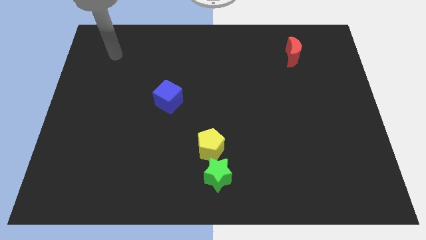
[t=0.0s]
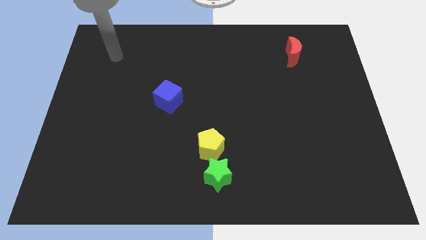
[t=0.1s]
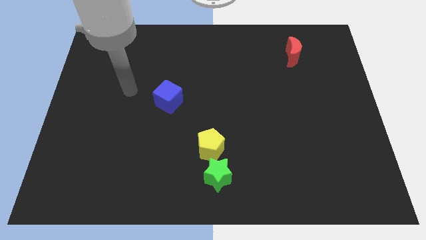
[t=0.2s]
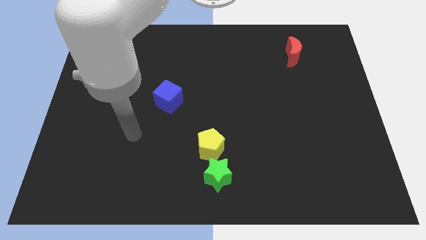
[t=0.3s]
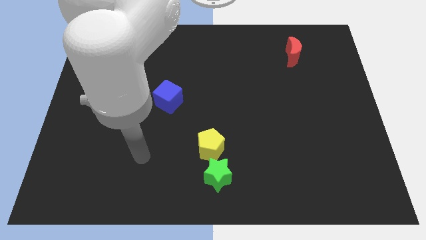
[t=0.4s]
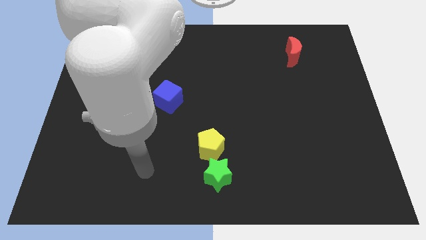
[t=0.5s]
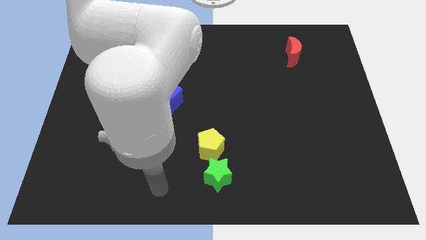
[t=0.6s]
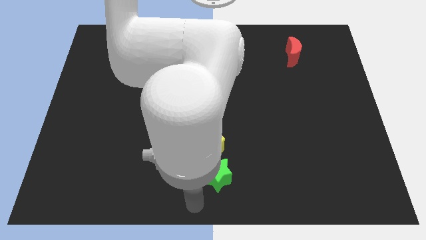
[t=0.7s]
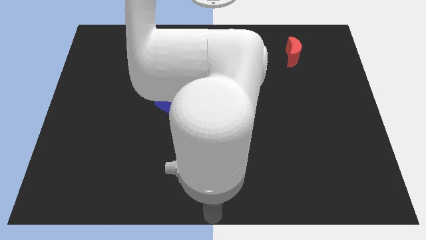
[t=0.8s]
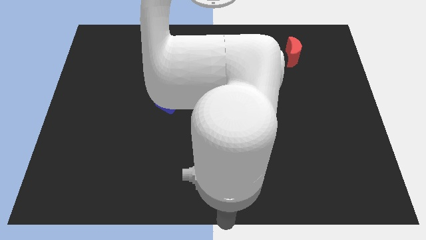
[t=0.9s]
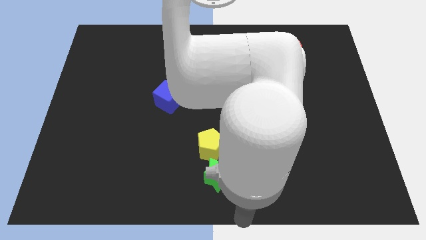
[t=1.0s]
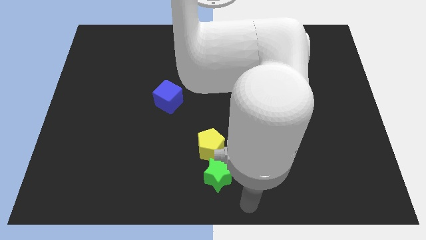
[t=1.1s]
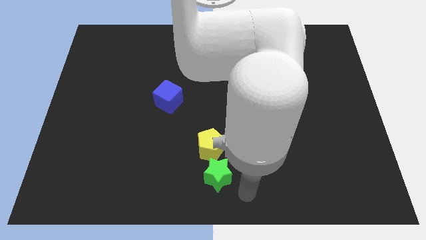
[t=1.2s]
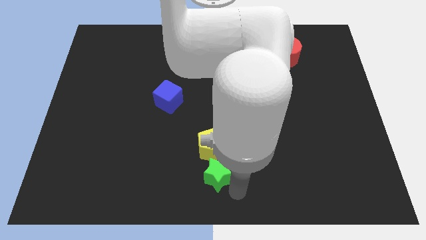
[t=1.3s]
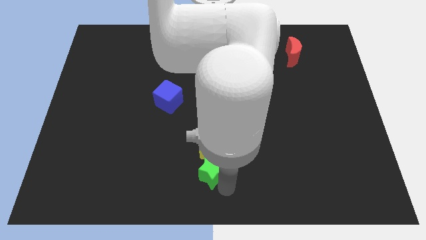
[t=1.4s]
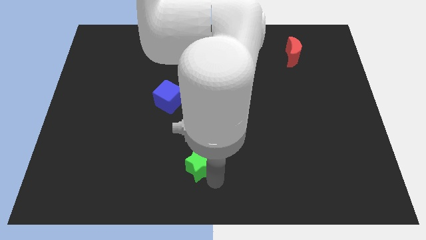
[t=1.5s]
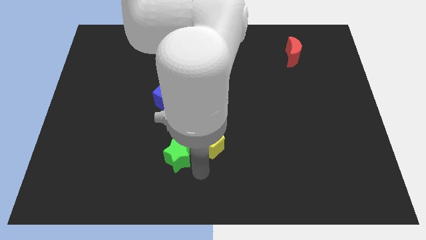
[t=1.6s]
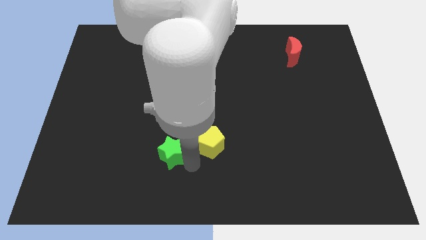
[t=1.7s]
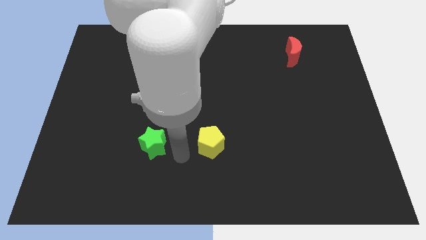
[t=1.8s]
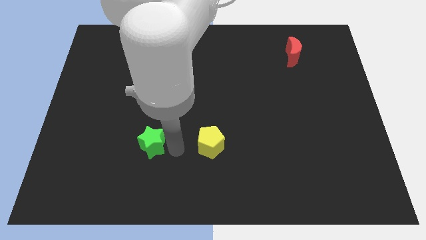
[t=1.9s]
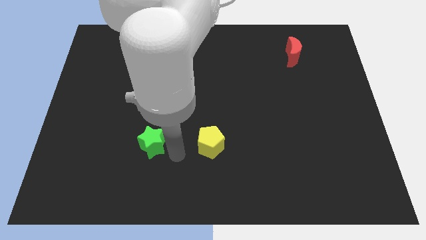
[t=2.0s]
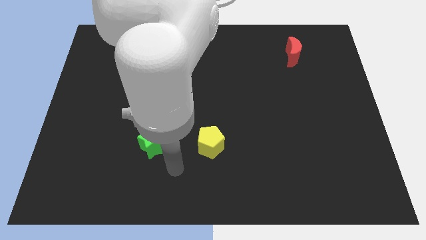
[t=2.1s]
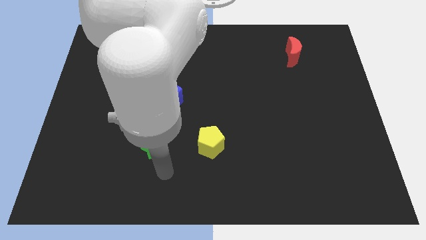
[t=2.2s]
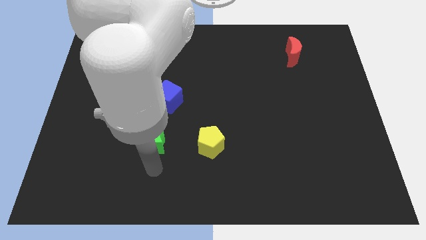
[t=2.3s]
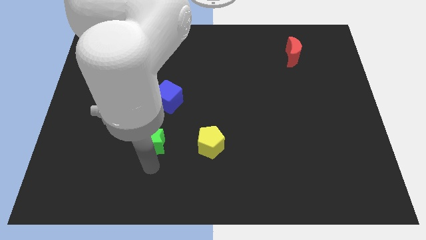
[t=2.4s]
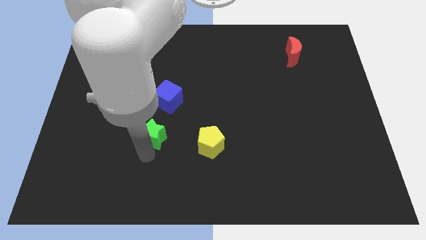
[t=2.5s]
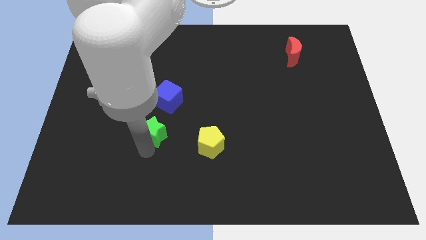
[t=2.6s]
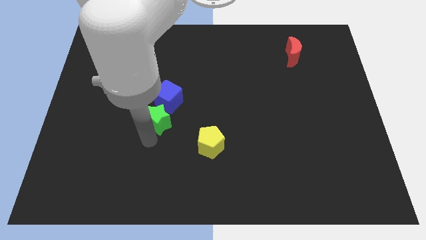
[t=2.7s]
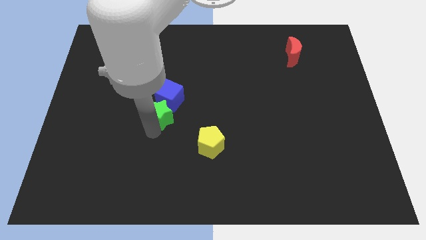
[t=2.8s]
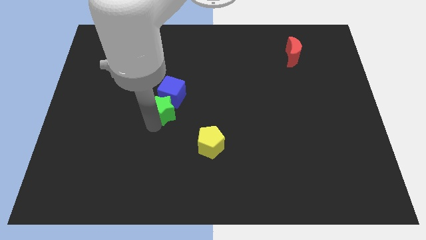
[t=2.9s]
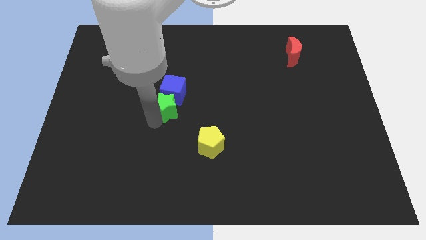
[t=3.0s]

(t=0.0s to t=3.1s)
move the star to the cube

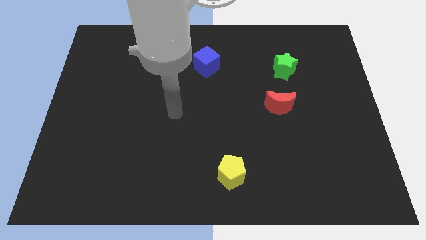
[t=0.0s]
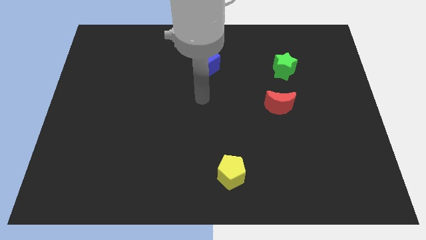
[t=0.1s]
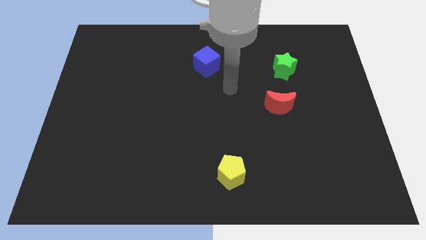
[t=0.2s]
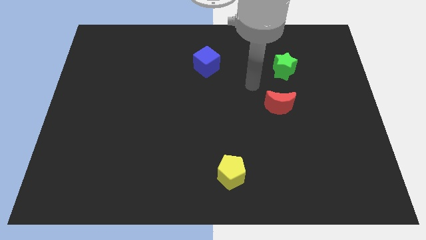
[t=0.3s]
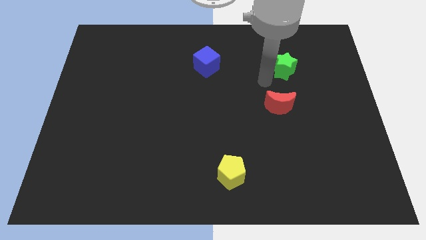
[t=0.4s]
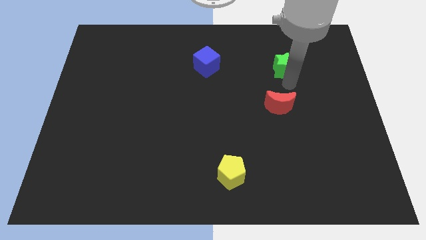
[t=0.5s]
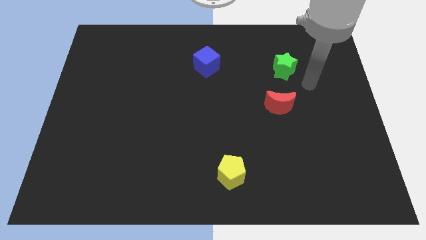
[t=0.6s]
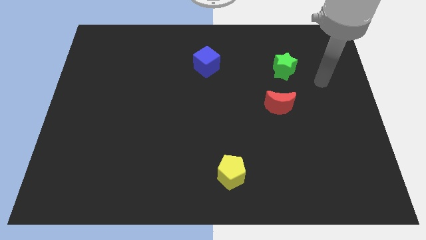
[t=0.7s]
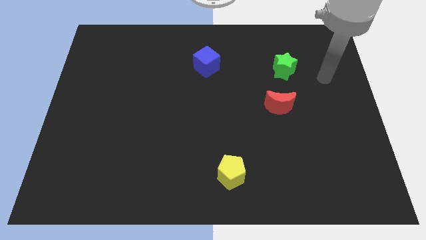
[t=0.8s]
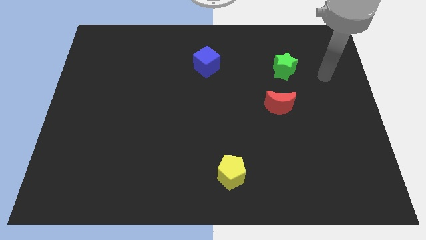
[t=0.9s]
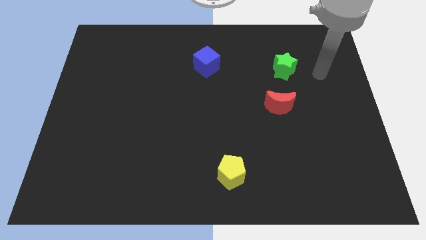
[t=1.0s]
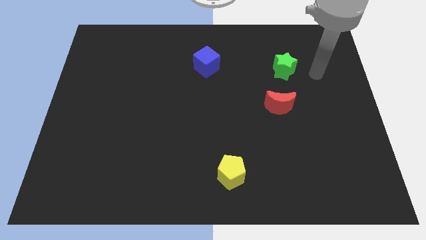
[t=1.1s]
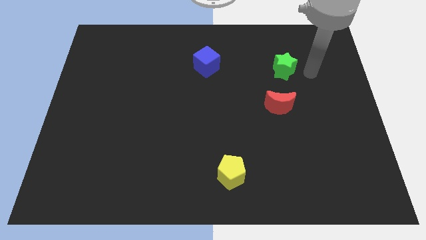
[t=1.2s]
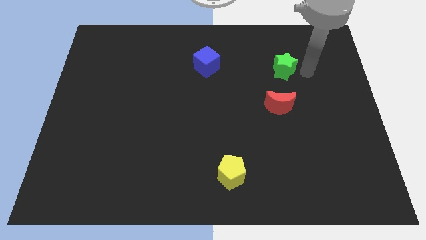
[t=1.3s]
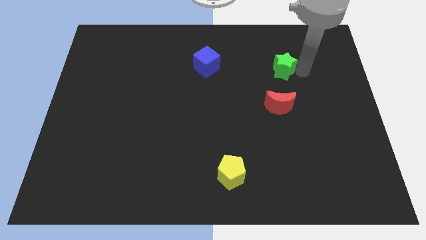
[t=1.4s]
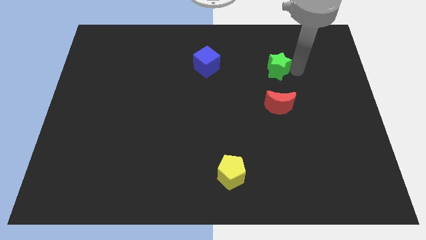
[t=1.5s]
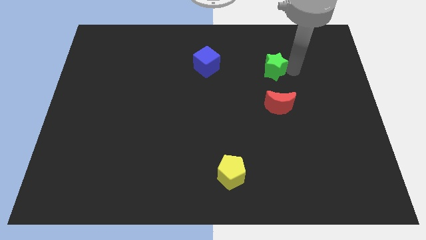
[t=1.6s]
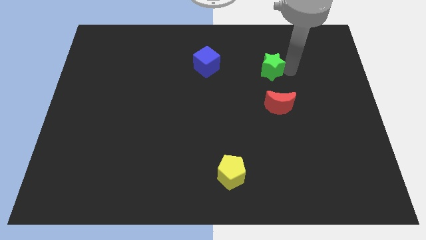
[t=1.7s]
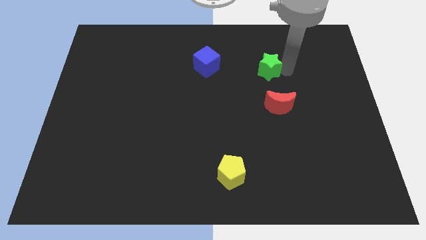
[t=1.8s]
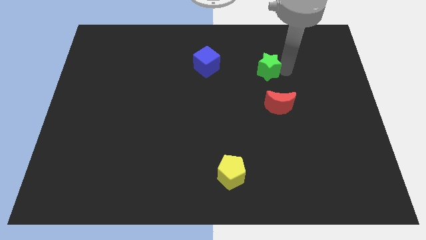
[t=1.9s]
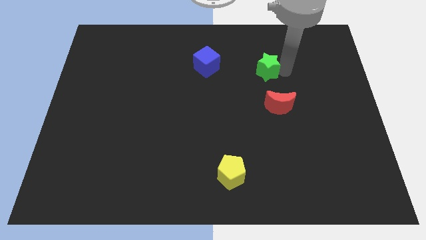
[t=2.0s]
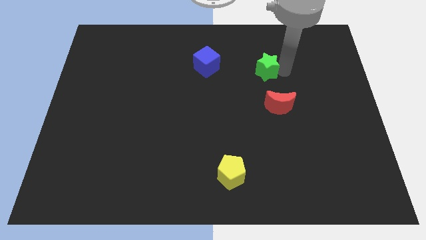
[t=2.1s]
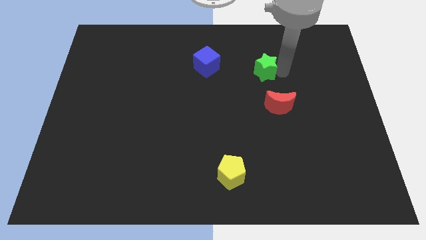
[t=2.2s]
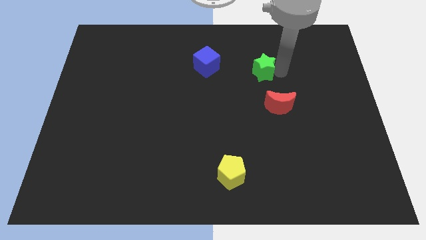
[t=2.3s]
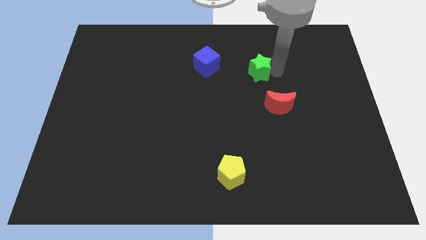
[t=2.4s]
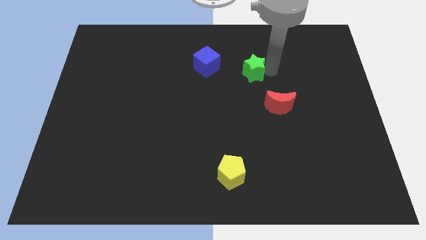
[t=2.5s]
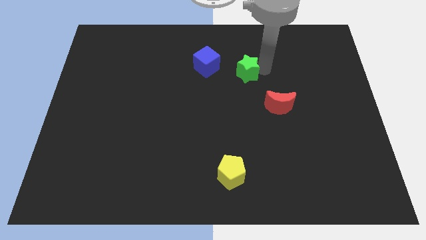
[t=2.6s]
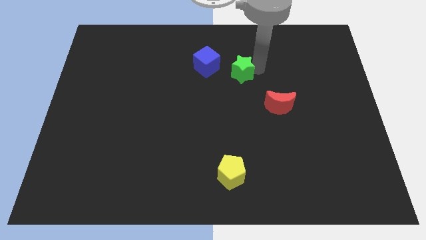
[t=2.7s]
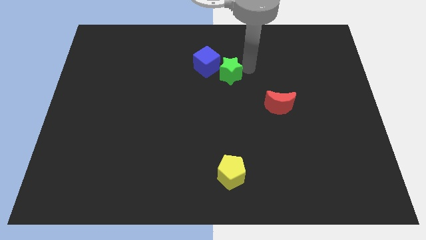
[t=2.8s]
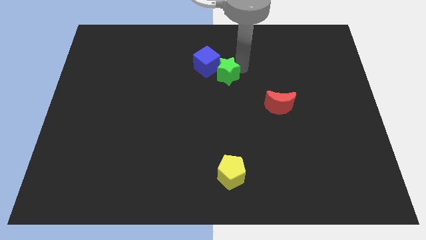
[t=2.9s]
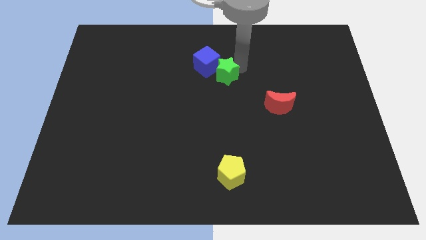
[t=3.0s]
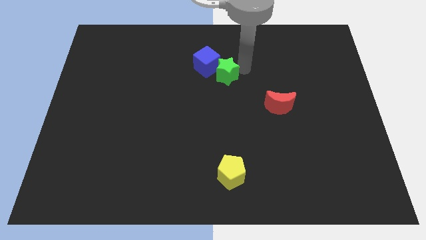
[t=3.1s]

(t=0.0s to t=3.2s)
slide the green star to the cube

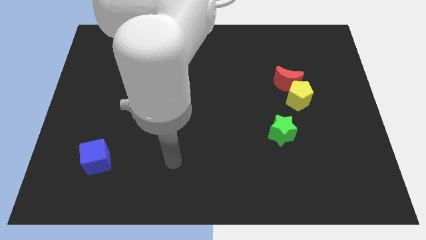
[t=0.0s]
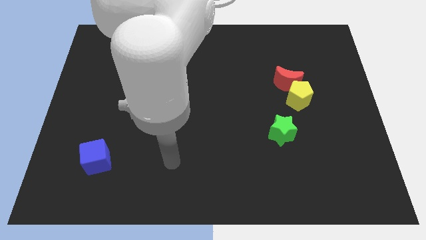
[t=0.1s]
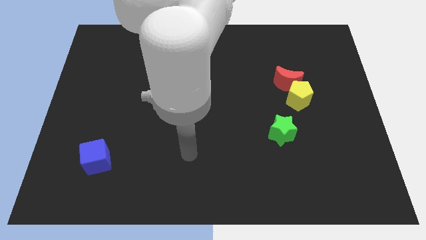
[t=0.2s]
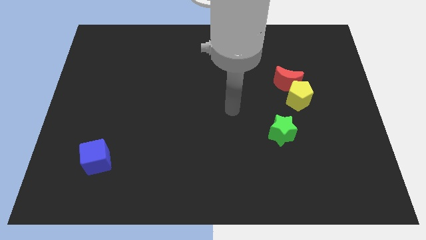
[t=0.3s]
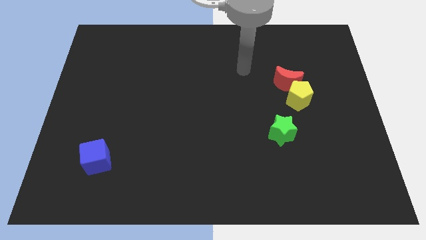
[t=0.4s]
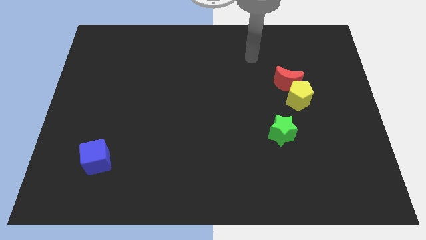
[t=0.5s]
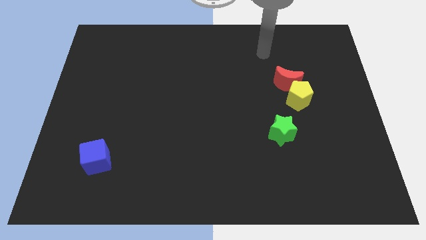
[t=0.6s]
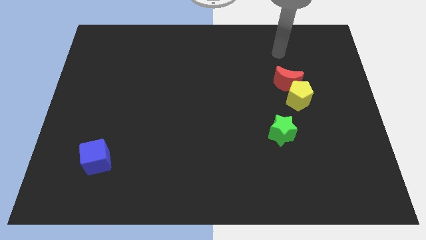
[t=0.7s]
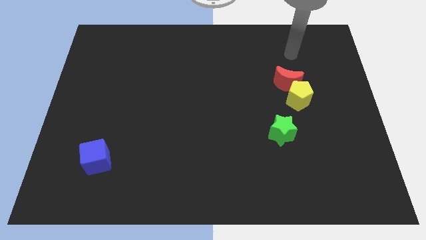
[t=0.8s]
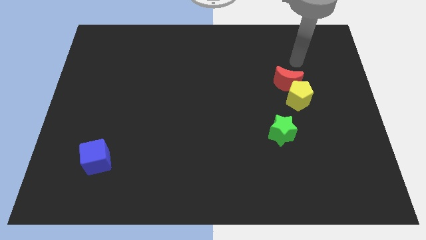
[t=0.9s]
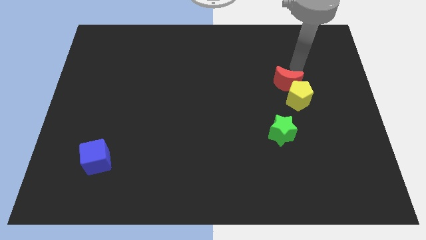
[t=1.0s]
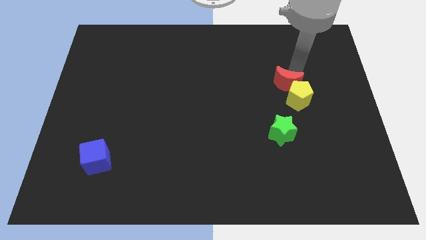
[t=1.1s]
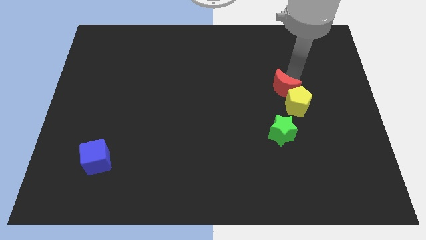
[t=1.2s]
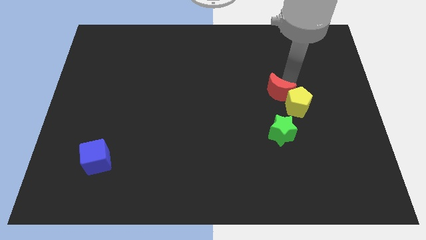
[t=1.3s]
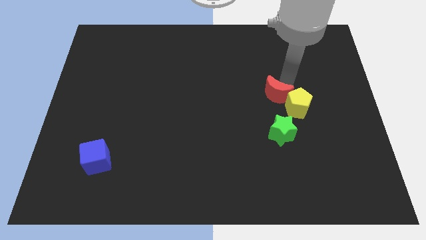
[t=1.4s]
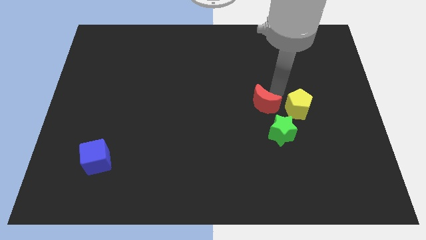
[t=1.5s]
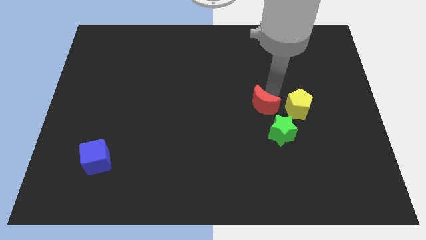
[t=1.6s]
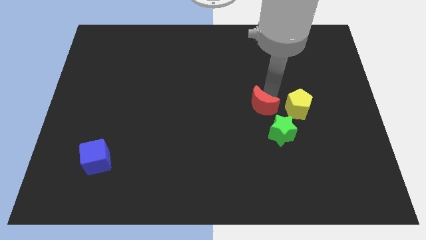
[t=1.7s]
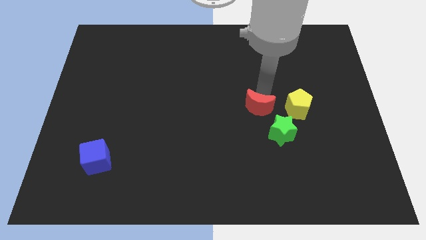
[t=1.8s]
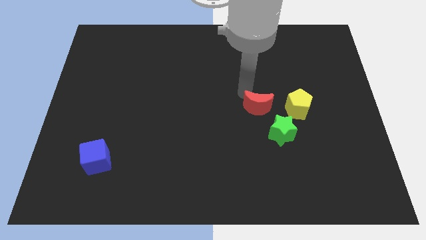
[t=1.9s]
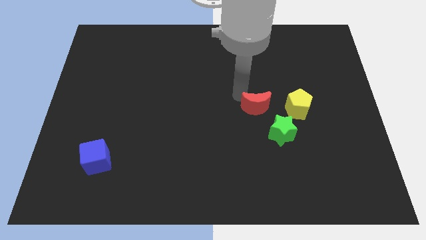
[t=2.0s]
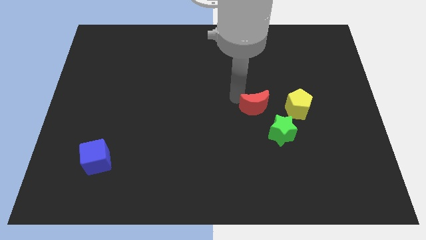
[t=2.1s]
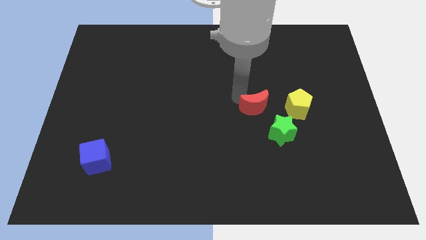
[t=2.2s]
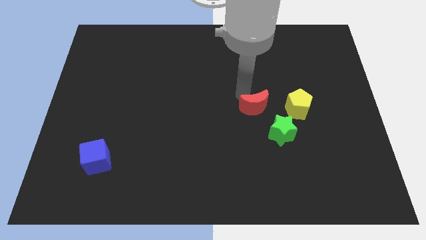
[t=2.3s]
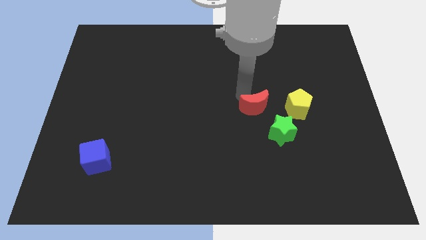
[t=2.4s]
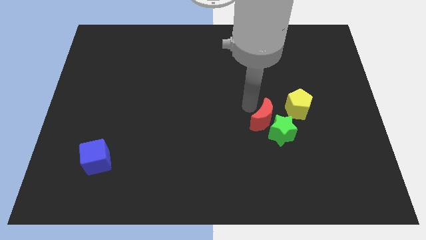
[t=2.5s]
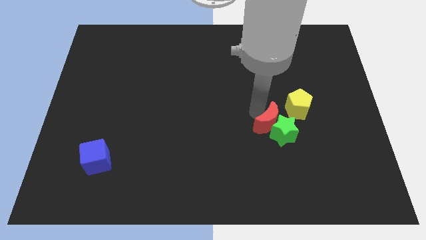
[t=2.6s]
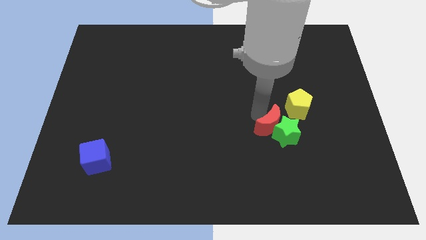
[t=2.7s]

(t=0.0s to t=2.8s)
put the red moon to the green star
